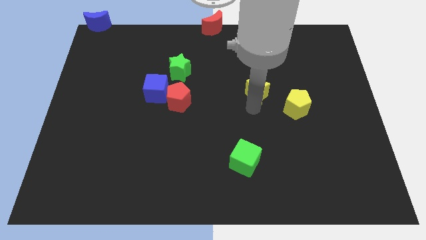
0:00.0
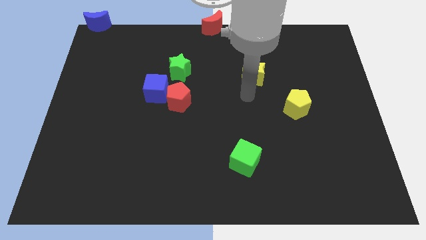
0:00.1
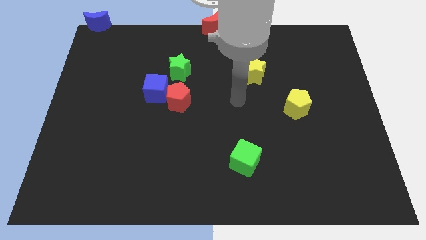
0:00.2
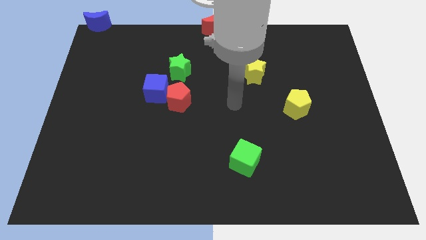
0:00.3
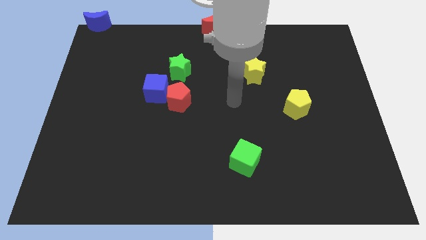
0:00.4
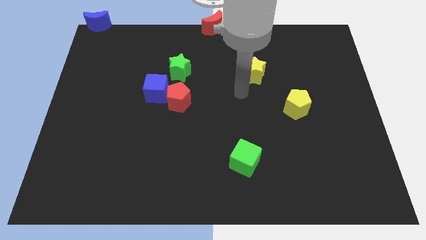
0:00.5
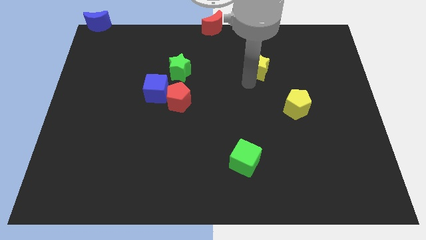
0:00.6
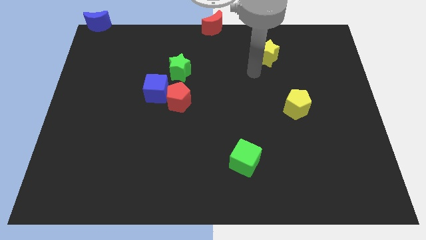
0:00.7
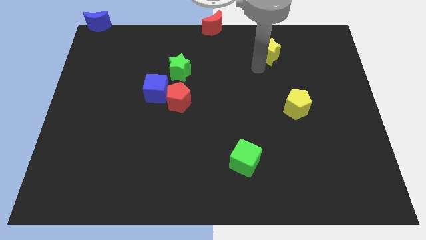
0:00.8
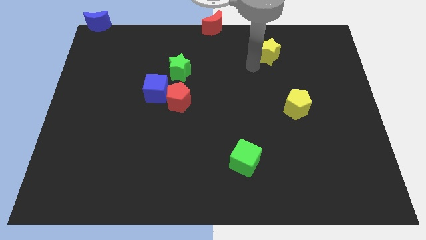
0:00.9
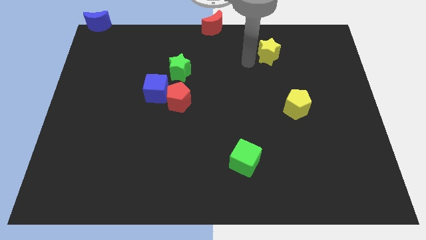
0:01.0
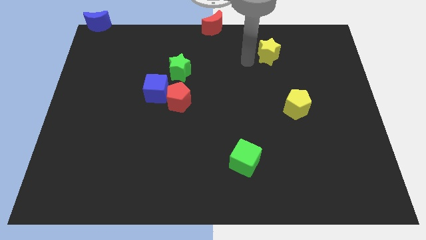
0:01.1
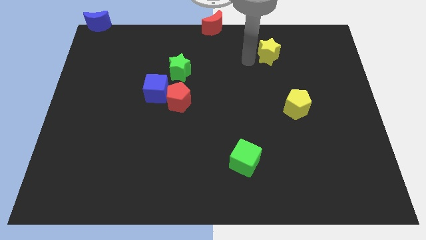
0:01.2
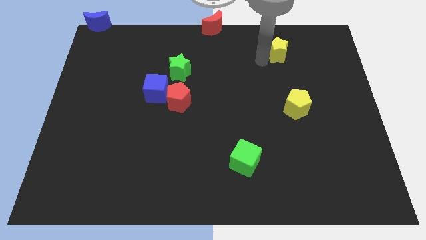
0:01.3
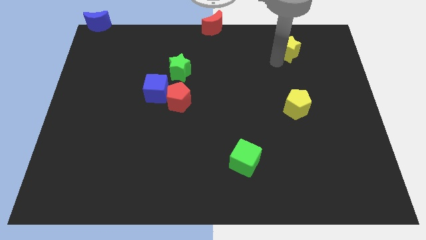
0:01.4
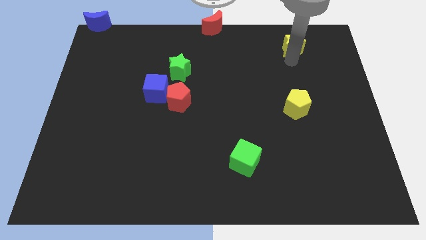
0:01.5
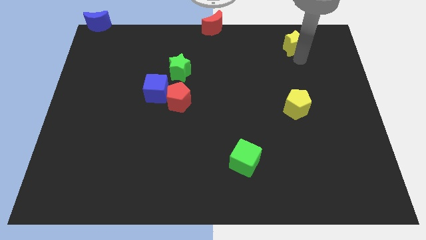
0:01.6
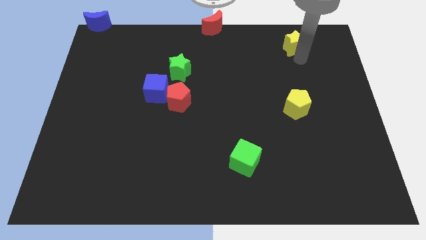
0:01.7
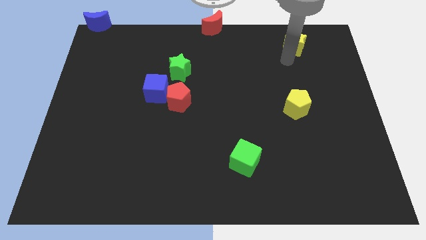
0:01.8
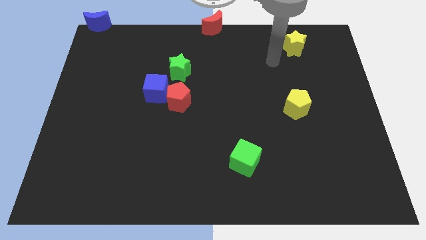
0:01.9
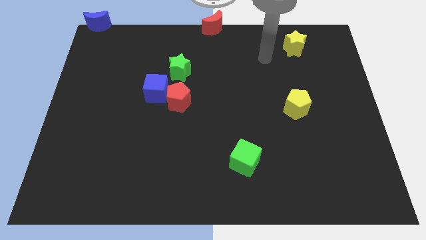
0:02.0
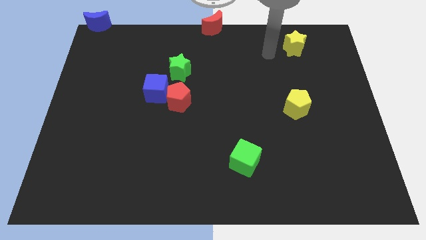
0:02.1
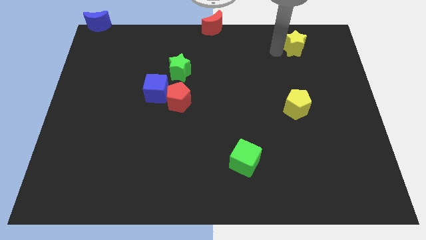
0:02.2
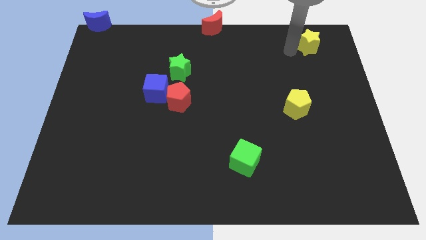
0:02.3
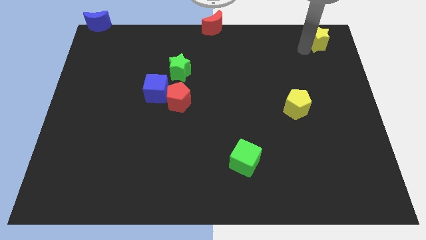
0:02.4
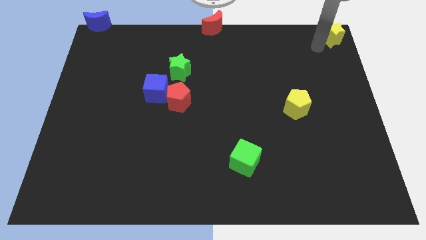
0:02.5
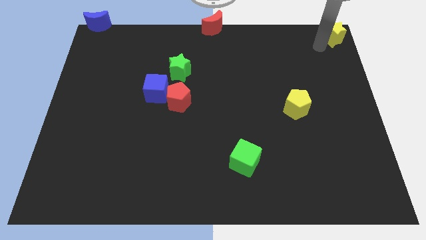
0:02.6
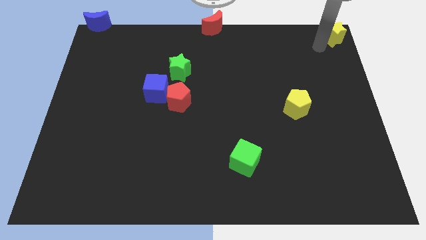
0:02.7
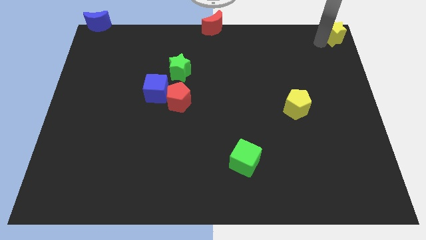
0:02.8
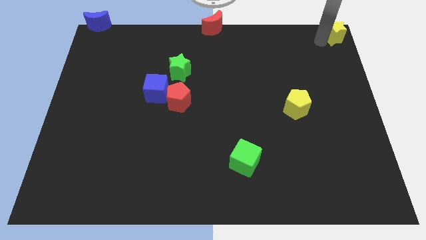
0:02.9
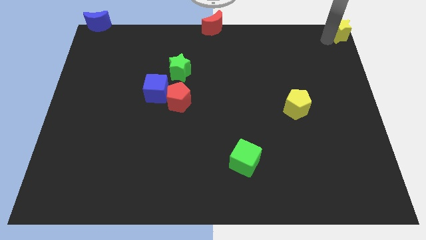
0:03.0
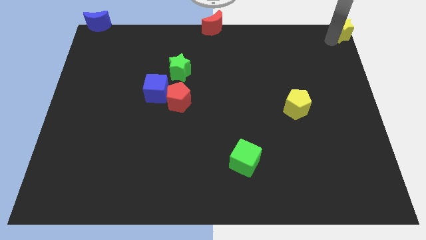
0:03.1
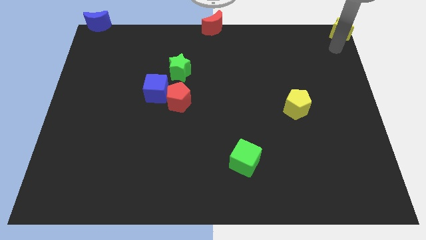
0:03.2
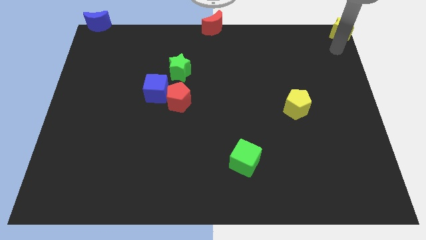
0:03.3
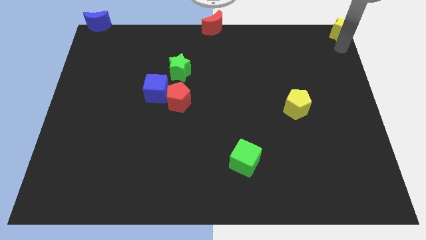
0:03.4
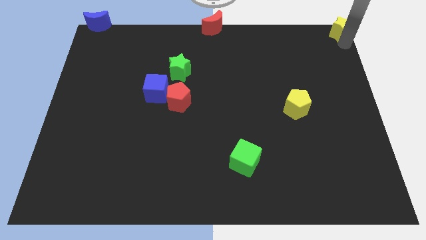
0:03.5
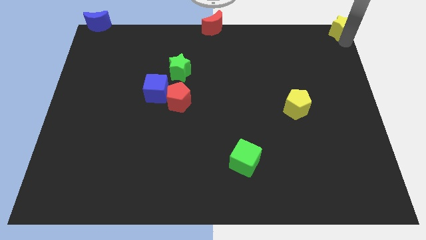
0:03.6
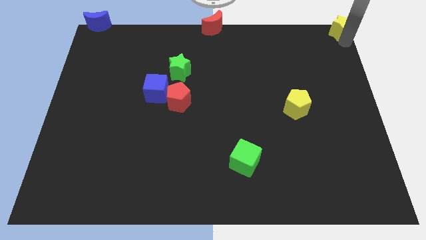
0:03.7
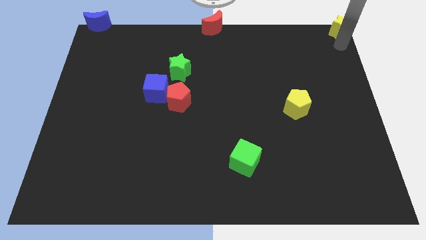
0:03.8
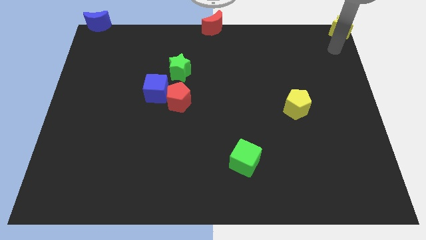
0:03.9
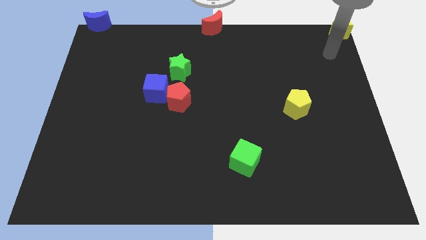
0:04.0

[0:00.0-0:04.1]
put the yellow star to the top right corner of the board

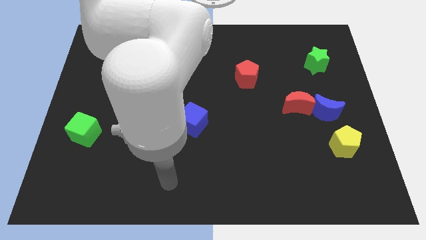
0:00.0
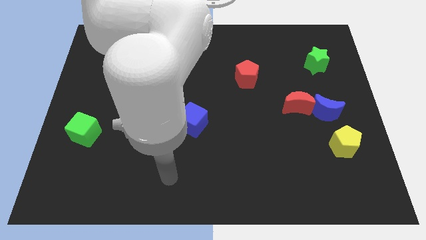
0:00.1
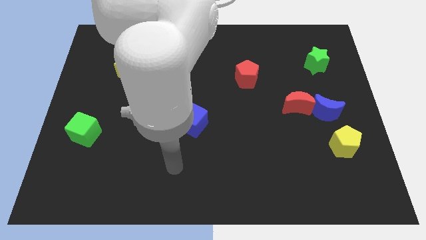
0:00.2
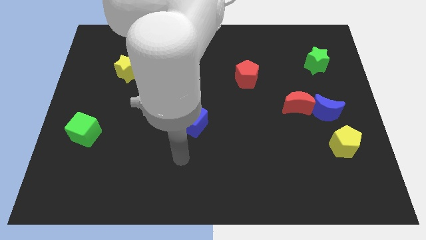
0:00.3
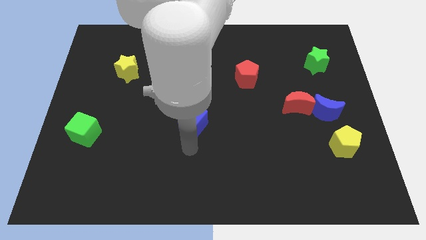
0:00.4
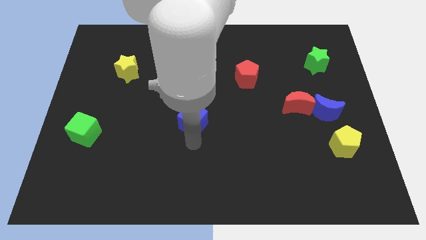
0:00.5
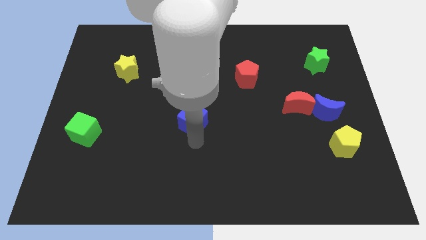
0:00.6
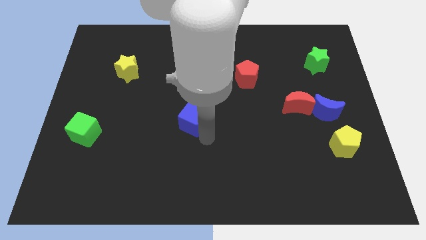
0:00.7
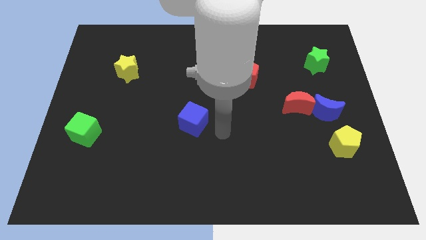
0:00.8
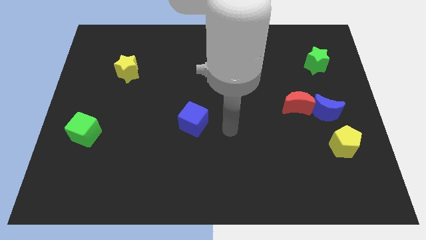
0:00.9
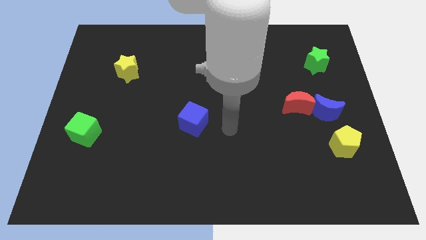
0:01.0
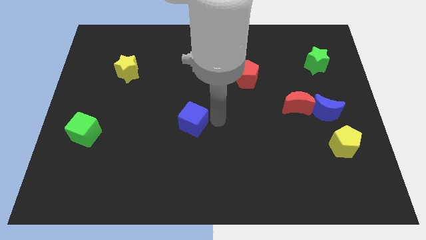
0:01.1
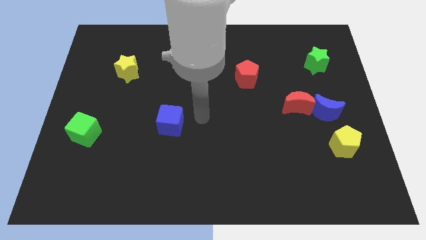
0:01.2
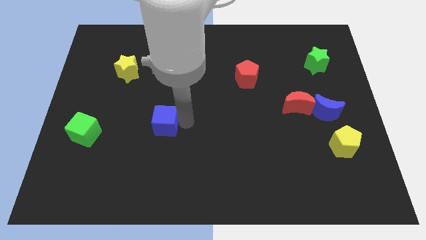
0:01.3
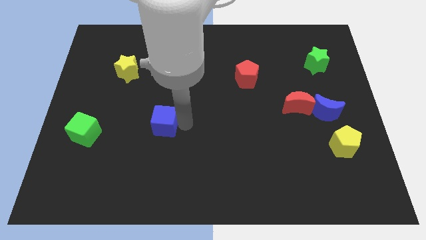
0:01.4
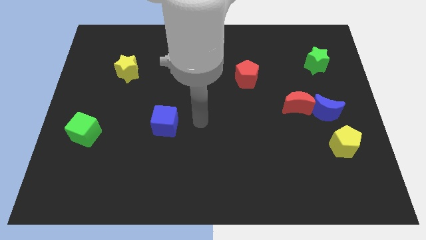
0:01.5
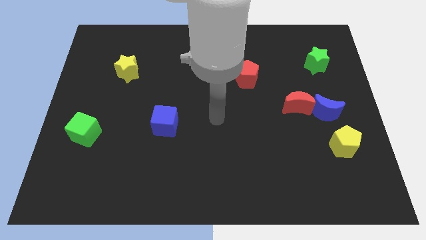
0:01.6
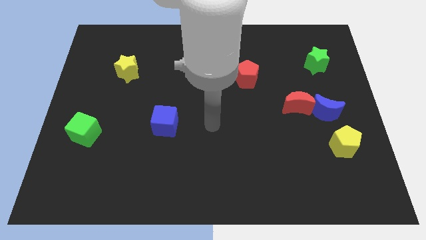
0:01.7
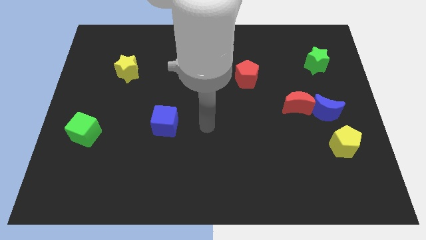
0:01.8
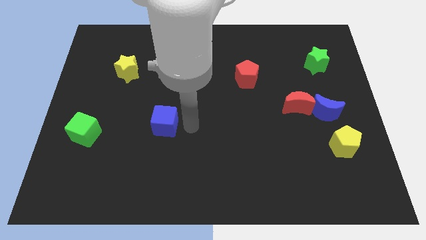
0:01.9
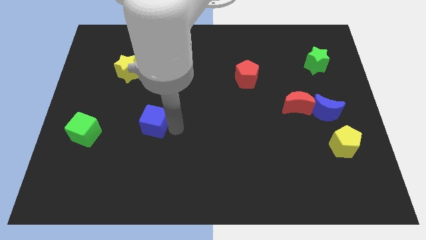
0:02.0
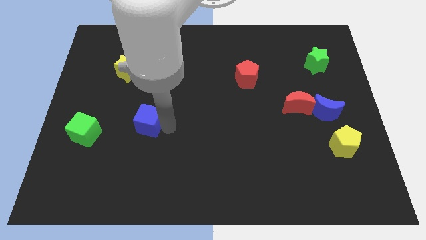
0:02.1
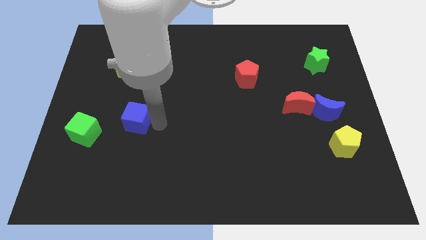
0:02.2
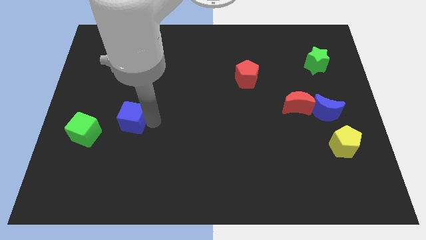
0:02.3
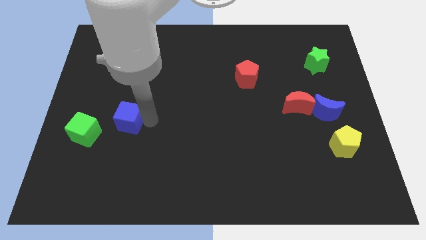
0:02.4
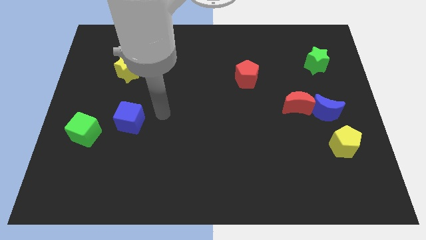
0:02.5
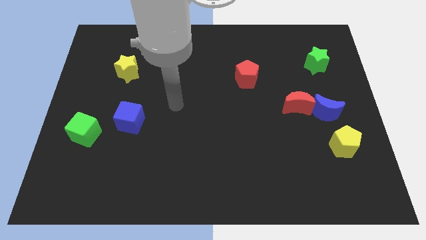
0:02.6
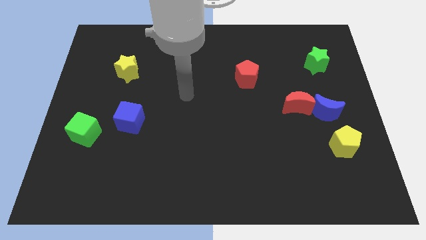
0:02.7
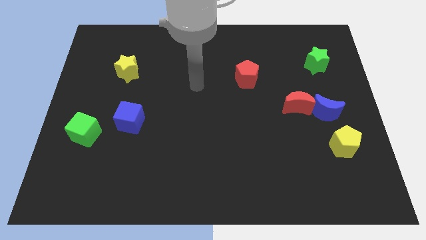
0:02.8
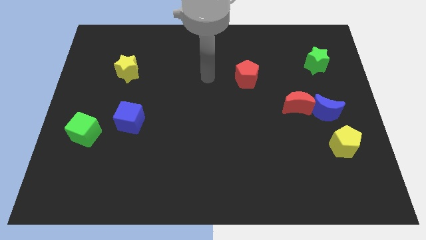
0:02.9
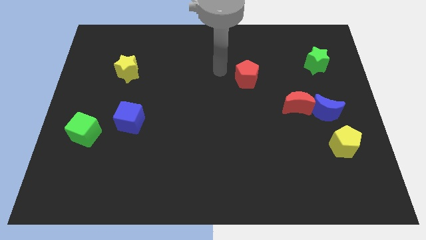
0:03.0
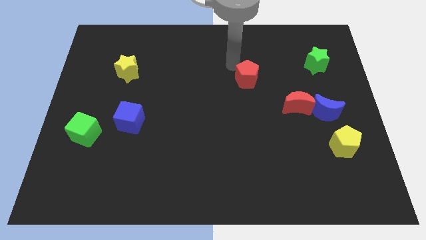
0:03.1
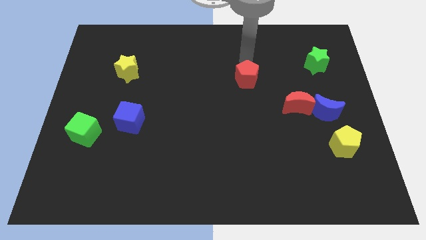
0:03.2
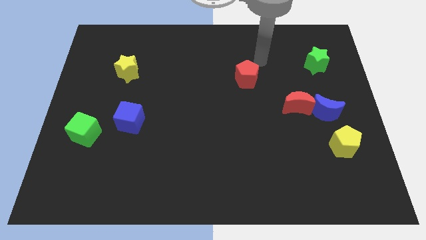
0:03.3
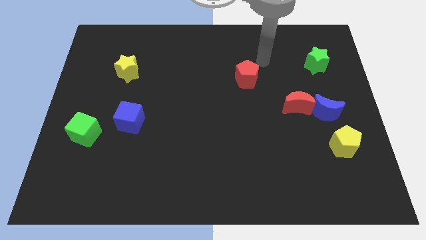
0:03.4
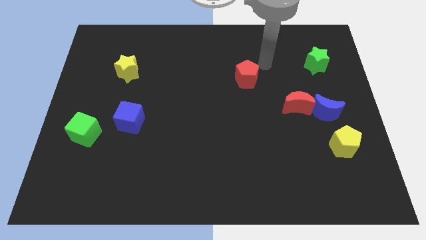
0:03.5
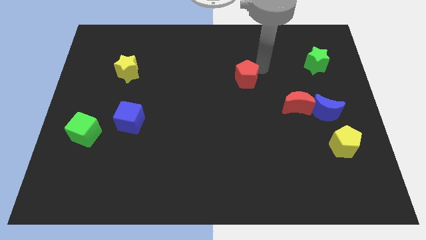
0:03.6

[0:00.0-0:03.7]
move the blue cube to the left of the board

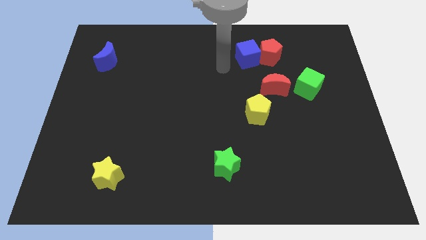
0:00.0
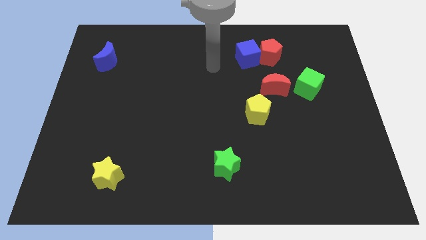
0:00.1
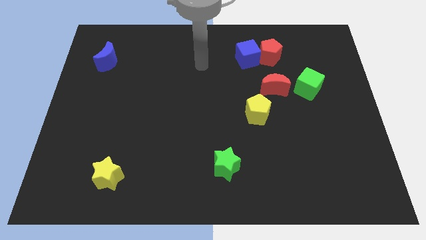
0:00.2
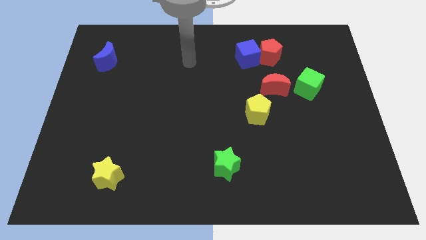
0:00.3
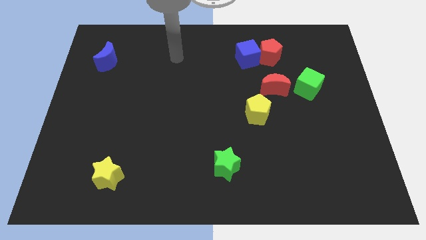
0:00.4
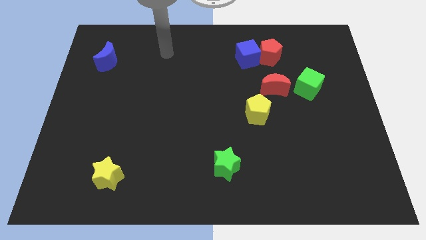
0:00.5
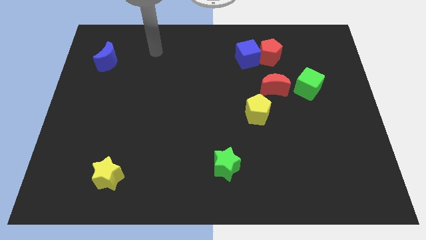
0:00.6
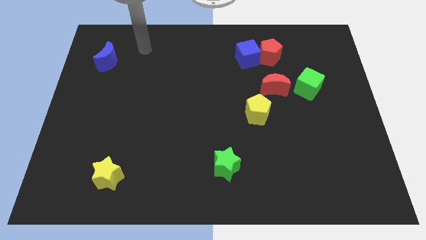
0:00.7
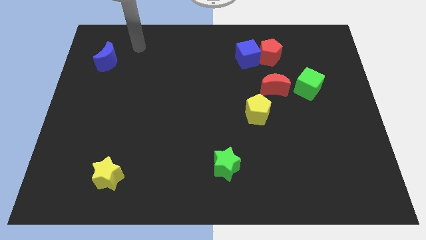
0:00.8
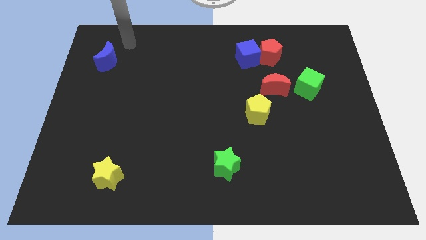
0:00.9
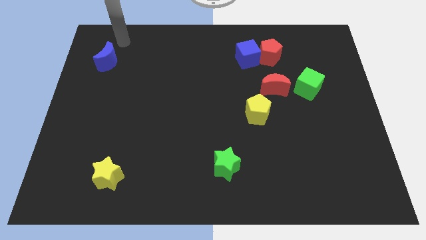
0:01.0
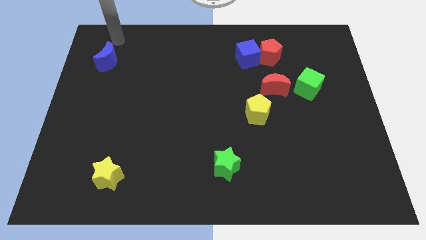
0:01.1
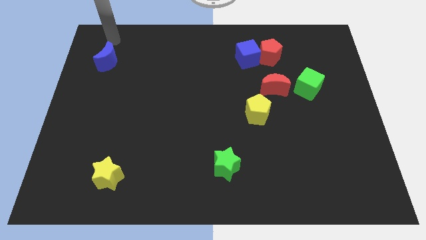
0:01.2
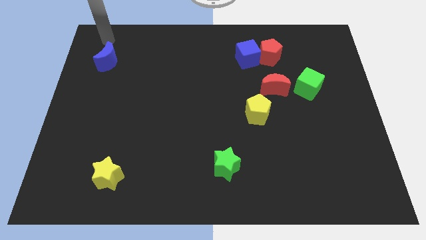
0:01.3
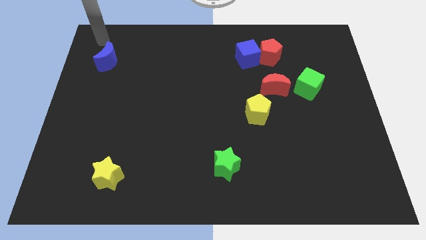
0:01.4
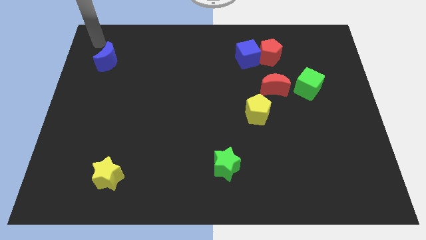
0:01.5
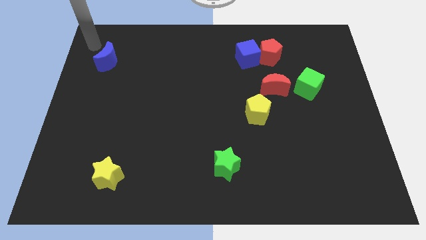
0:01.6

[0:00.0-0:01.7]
move the arm towards blue crescent
